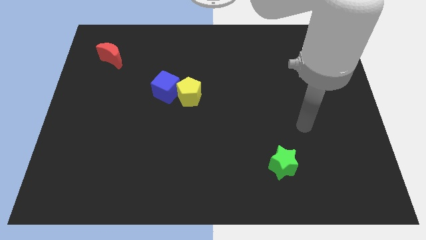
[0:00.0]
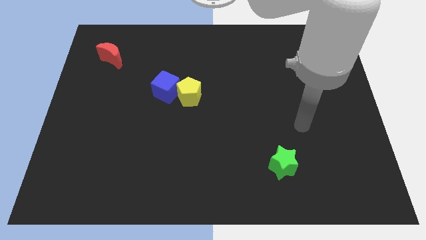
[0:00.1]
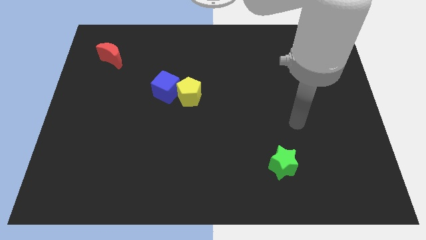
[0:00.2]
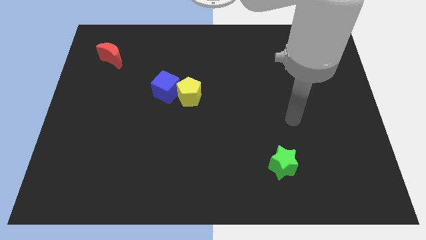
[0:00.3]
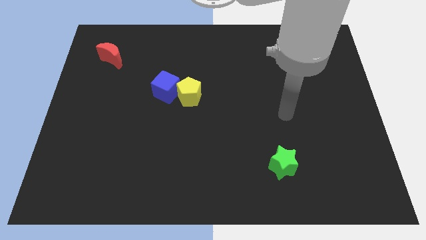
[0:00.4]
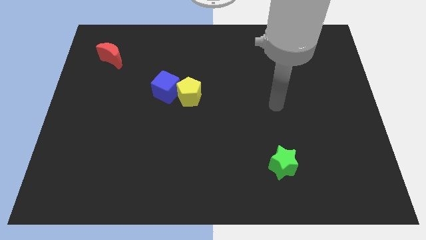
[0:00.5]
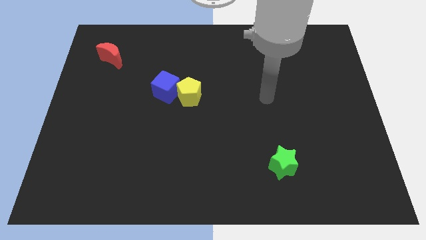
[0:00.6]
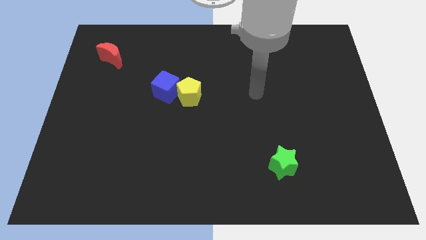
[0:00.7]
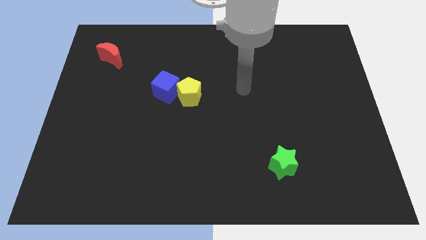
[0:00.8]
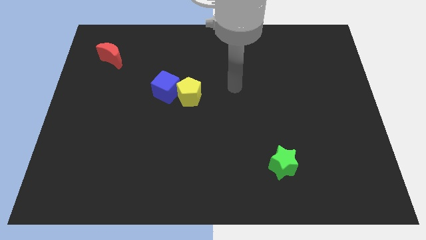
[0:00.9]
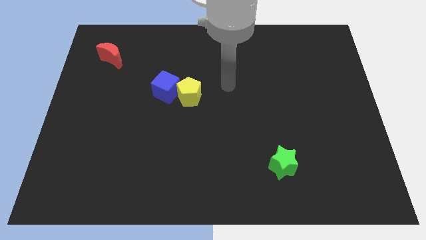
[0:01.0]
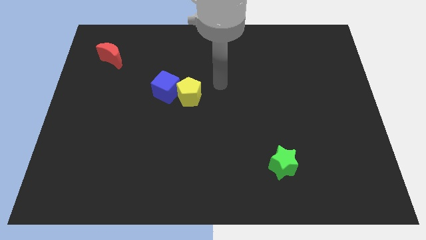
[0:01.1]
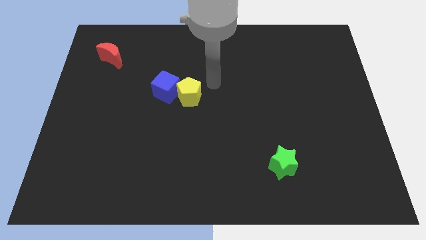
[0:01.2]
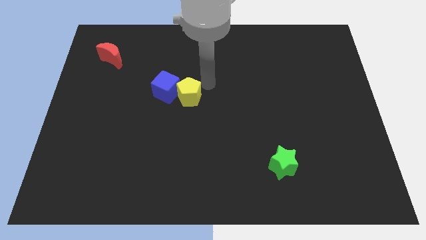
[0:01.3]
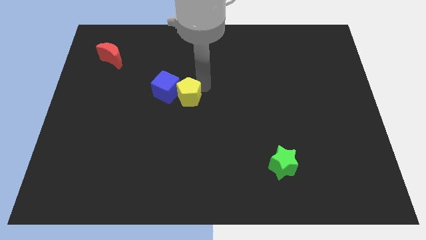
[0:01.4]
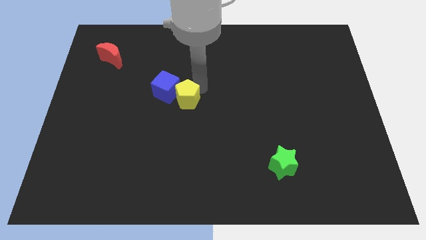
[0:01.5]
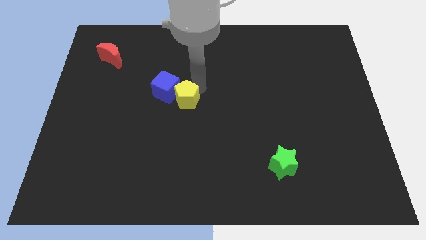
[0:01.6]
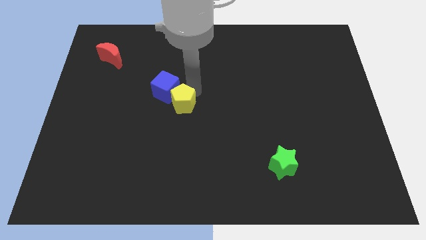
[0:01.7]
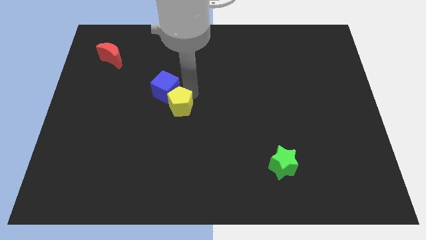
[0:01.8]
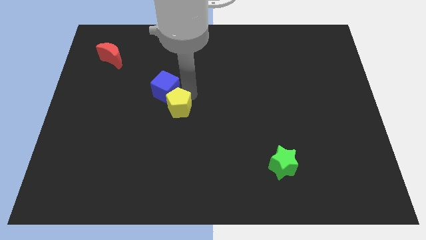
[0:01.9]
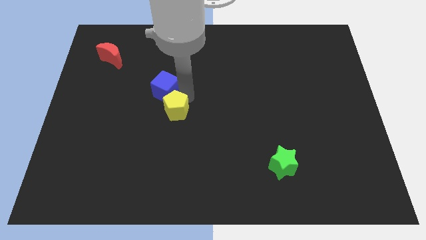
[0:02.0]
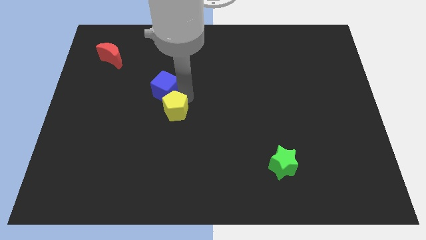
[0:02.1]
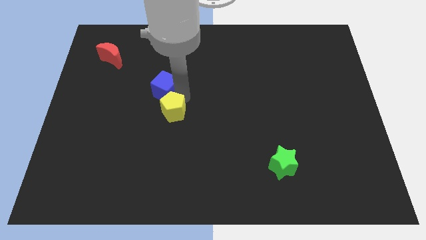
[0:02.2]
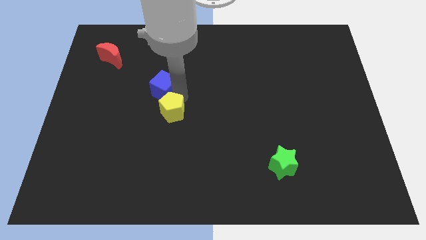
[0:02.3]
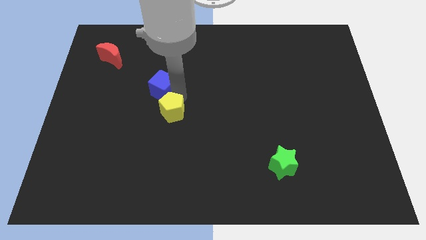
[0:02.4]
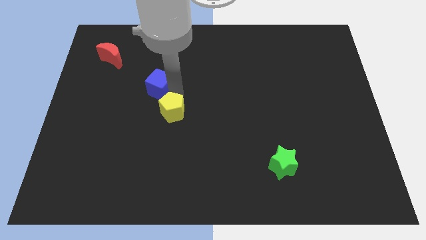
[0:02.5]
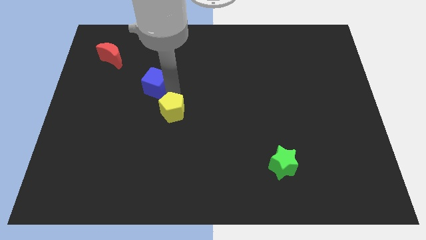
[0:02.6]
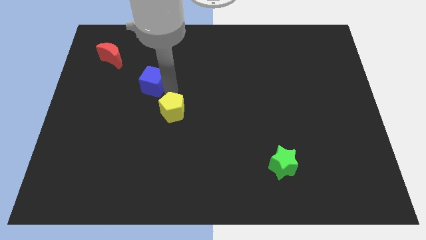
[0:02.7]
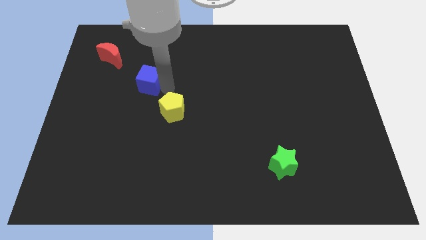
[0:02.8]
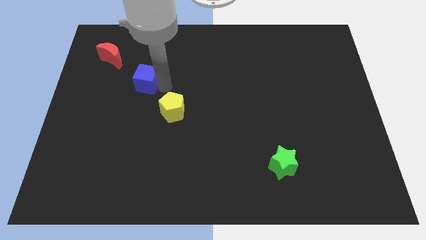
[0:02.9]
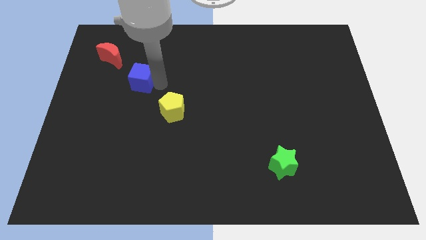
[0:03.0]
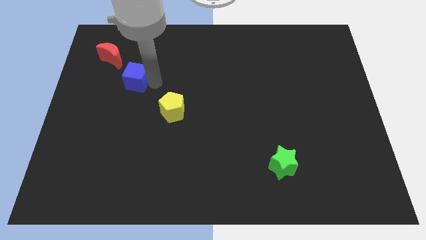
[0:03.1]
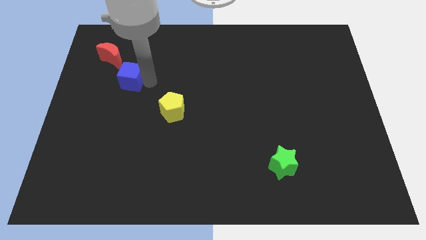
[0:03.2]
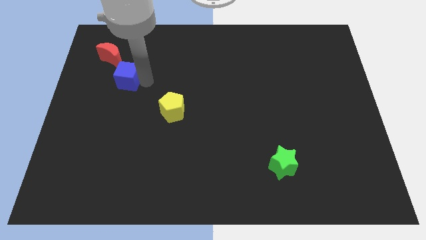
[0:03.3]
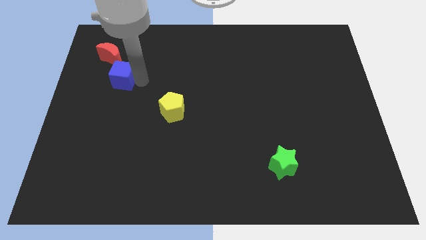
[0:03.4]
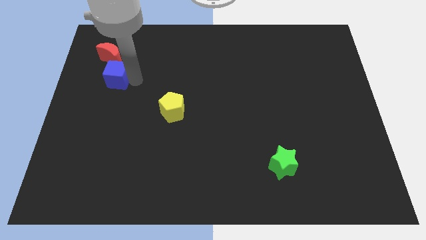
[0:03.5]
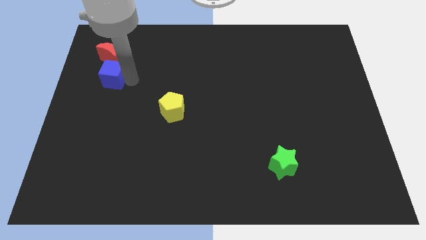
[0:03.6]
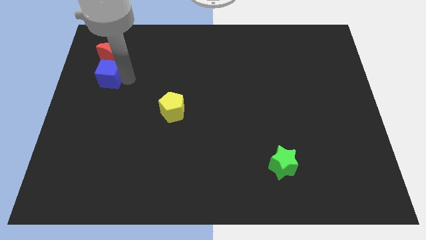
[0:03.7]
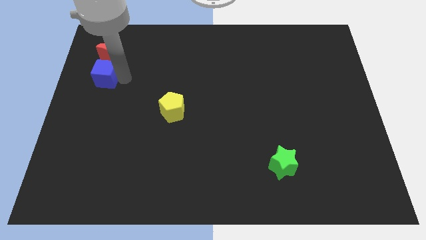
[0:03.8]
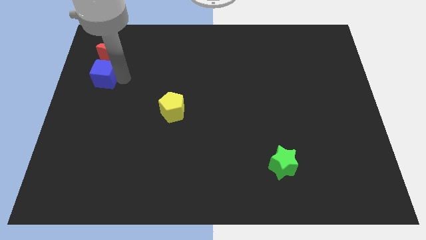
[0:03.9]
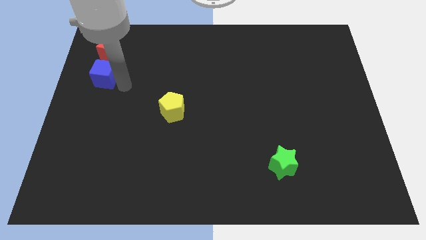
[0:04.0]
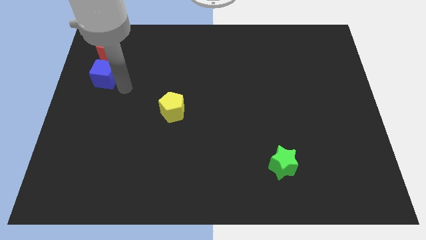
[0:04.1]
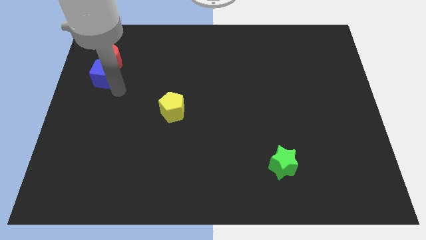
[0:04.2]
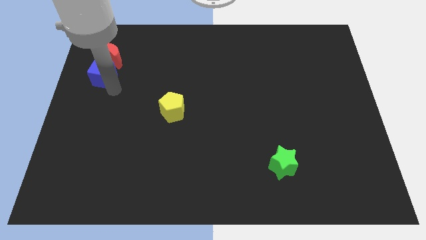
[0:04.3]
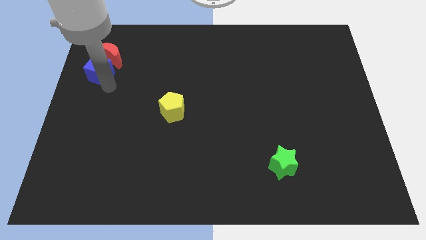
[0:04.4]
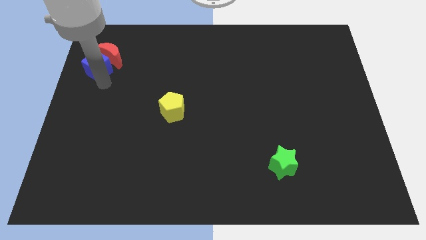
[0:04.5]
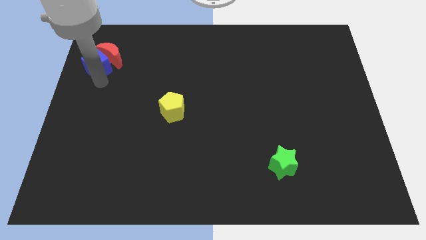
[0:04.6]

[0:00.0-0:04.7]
put the blue block close to the red block

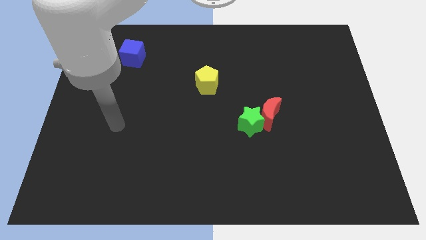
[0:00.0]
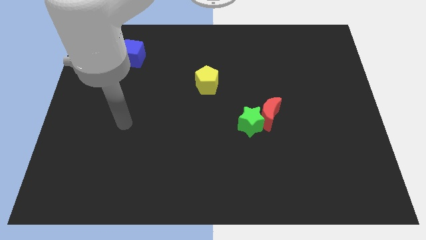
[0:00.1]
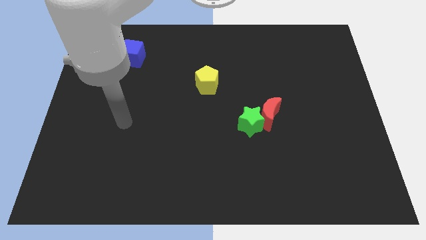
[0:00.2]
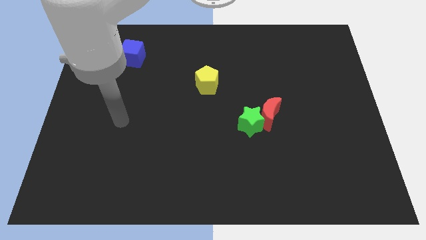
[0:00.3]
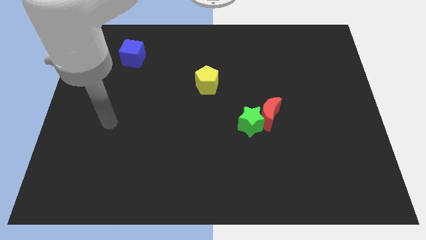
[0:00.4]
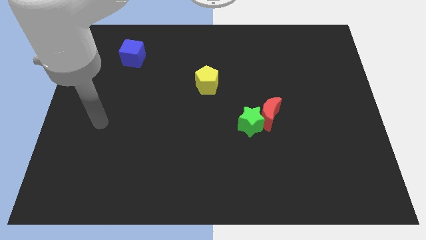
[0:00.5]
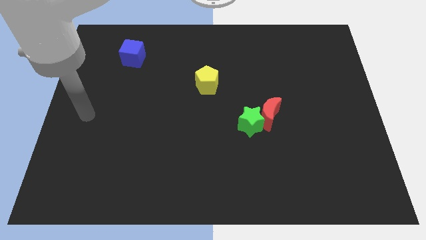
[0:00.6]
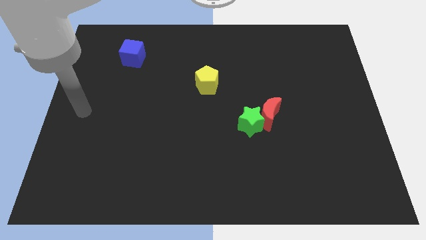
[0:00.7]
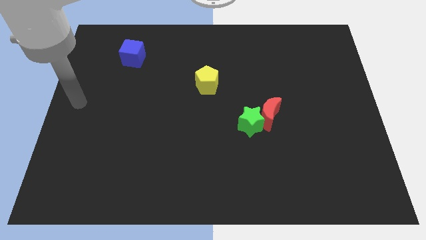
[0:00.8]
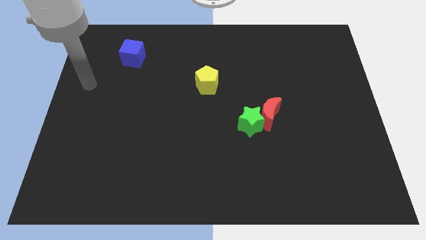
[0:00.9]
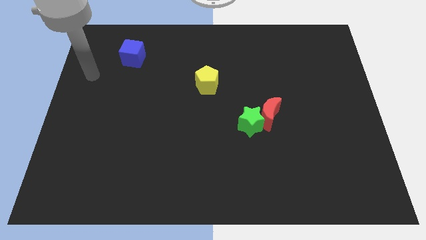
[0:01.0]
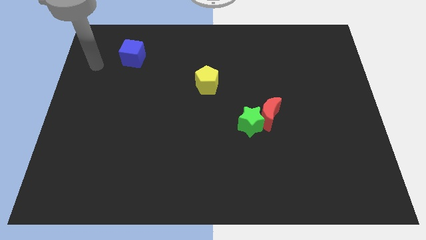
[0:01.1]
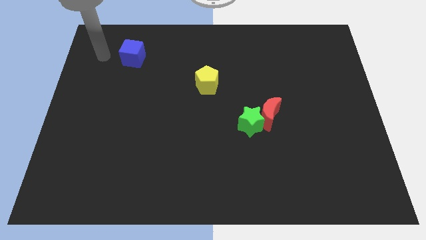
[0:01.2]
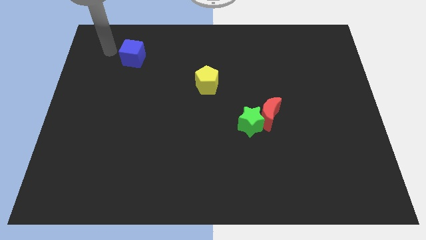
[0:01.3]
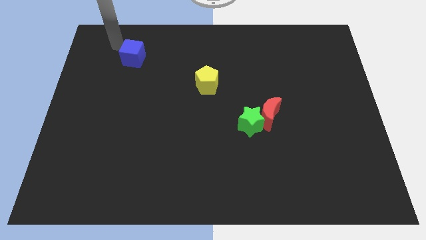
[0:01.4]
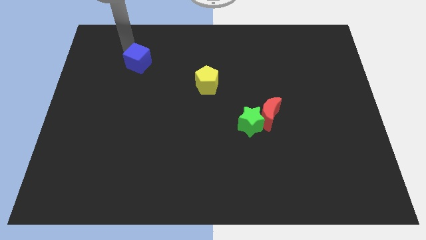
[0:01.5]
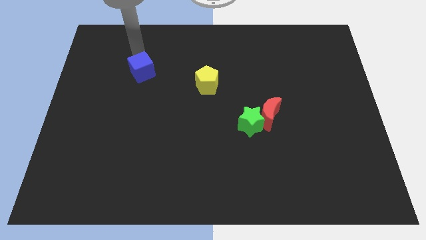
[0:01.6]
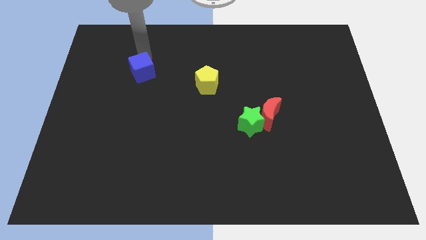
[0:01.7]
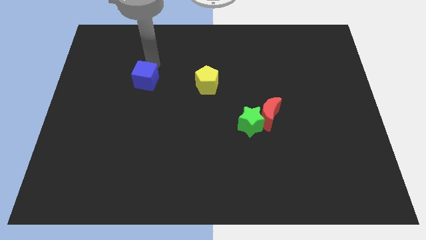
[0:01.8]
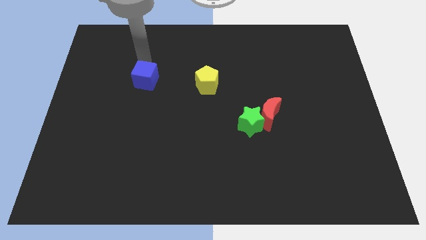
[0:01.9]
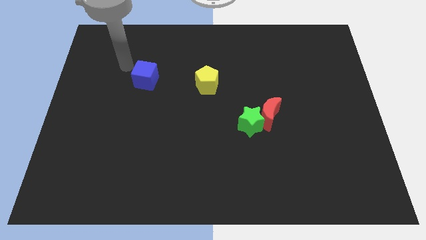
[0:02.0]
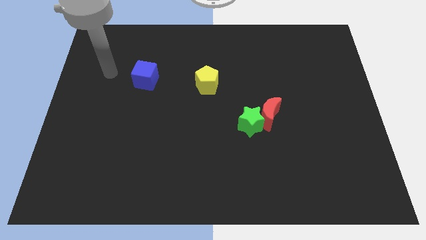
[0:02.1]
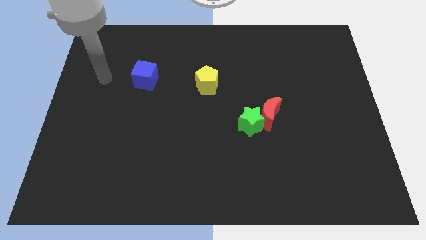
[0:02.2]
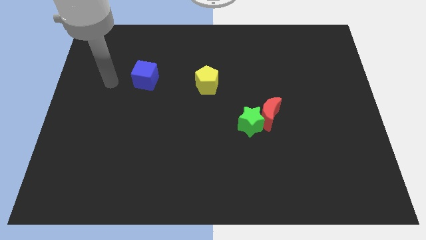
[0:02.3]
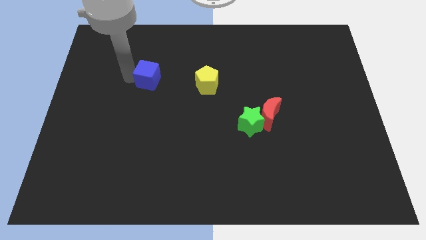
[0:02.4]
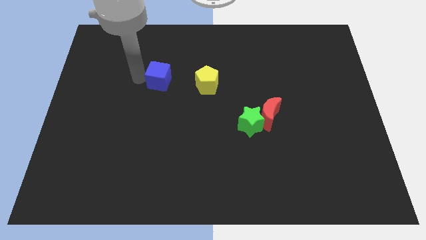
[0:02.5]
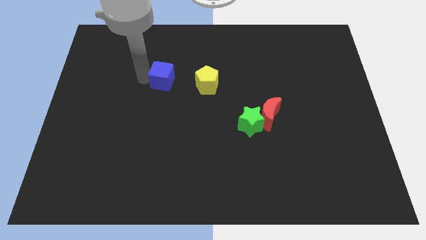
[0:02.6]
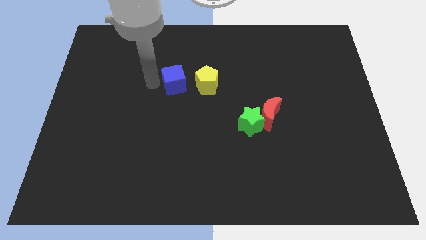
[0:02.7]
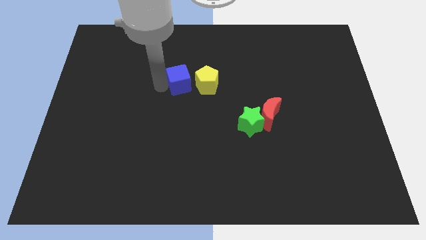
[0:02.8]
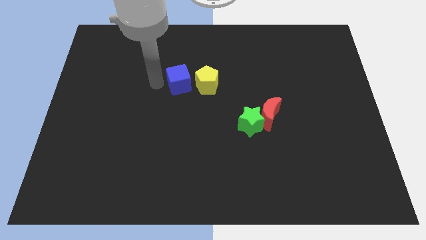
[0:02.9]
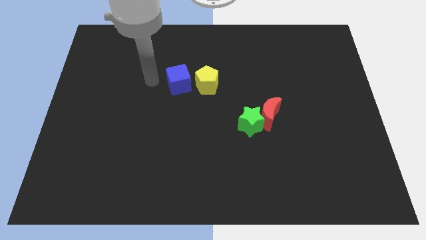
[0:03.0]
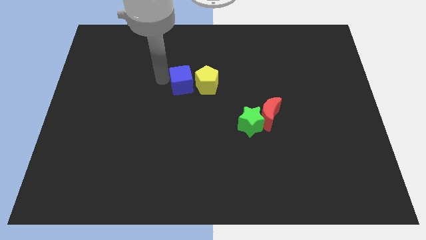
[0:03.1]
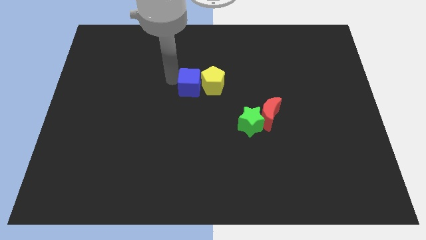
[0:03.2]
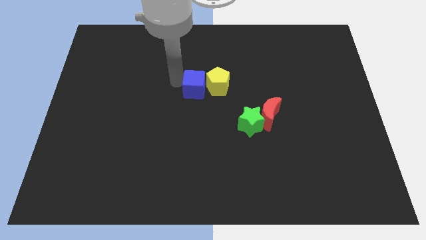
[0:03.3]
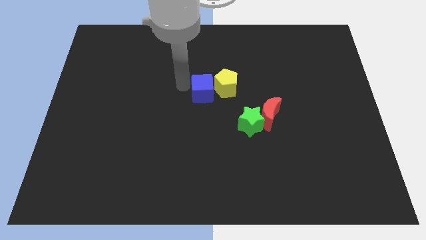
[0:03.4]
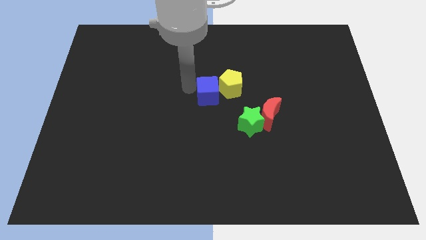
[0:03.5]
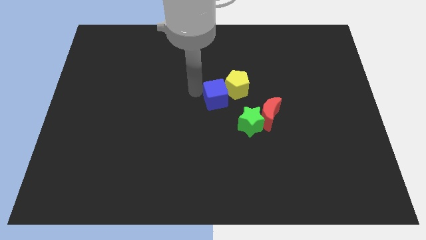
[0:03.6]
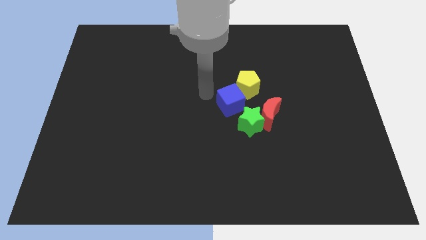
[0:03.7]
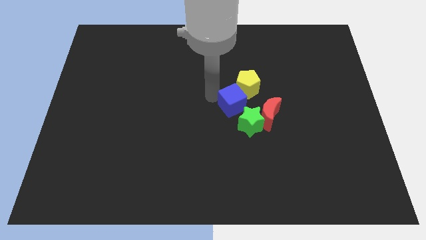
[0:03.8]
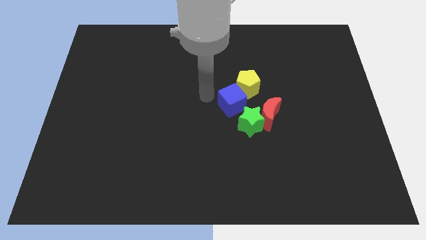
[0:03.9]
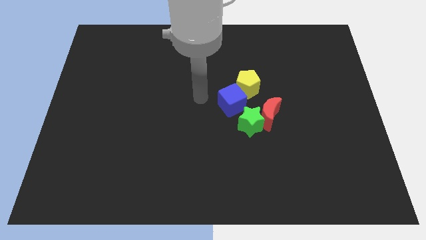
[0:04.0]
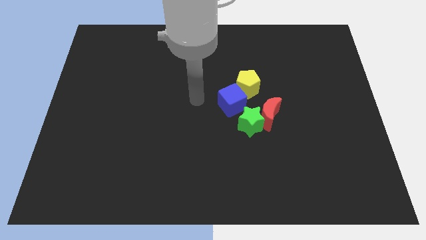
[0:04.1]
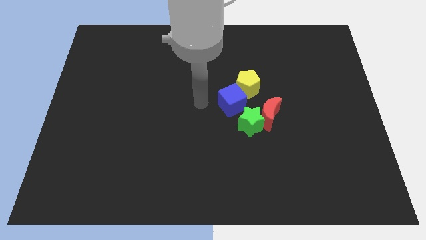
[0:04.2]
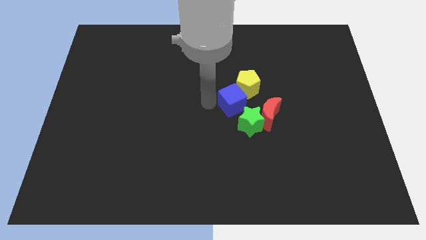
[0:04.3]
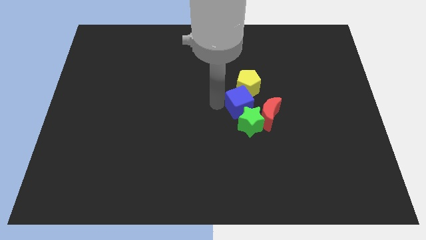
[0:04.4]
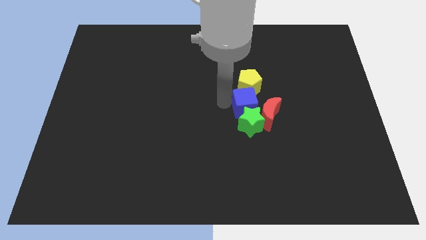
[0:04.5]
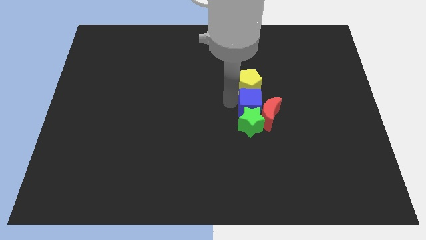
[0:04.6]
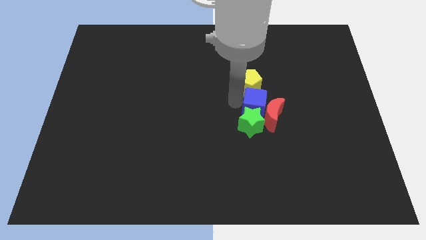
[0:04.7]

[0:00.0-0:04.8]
put the blue block towards the red moon
